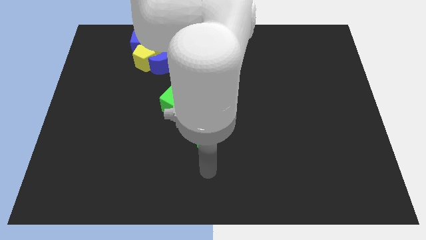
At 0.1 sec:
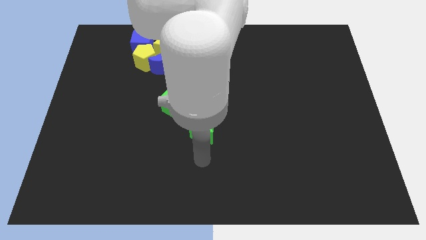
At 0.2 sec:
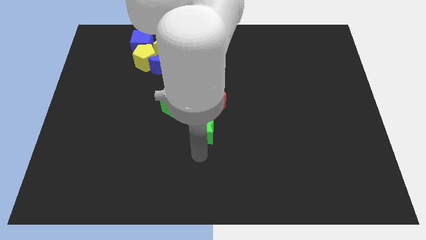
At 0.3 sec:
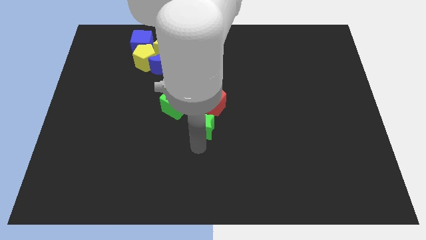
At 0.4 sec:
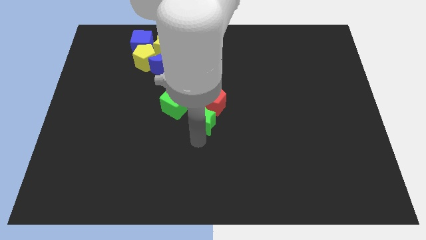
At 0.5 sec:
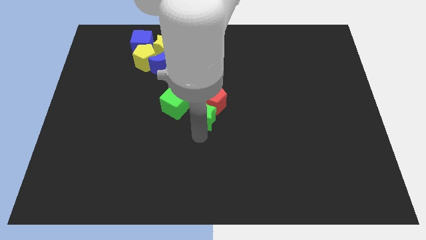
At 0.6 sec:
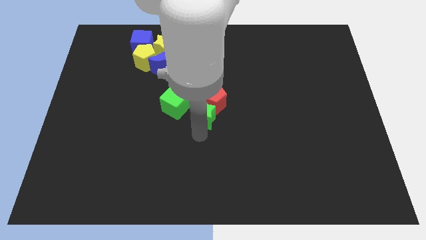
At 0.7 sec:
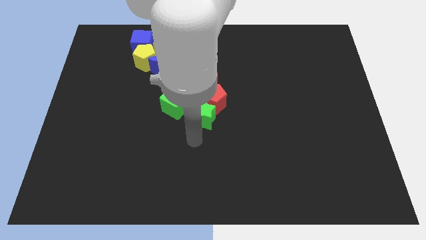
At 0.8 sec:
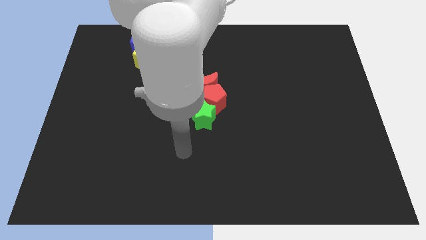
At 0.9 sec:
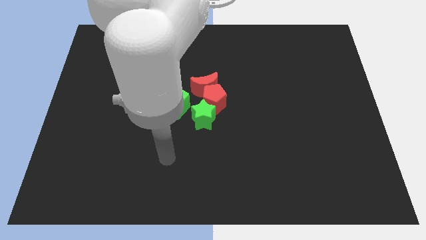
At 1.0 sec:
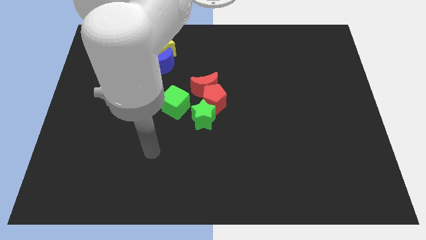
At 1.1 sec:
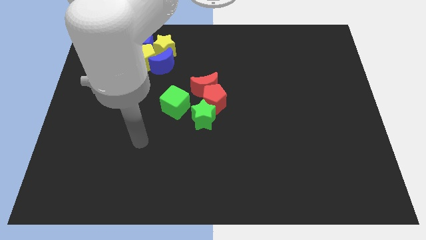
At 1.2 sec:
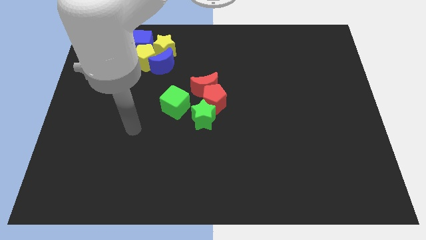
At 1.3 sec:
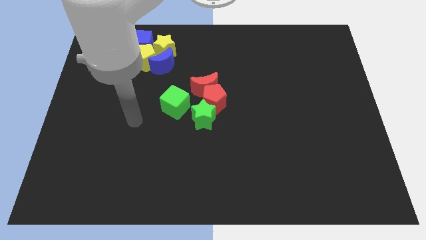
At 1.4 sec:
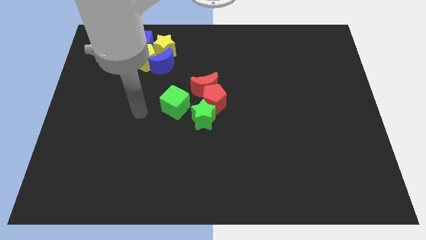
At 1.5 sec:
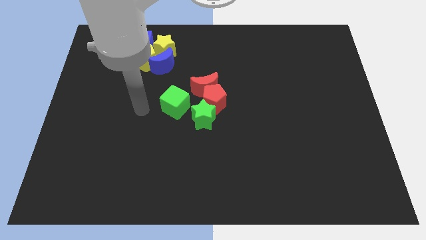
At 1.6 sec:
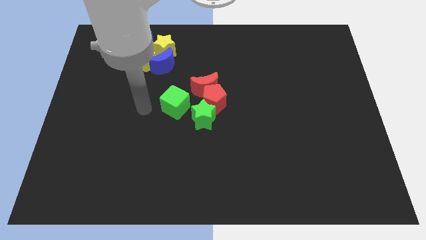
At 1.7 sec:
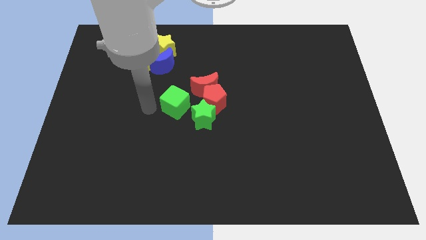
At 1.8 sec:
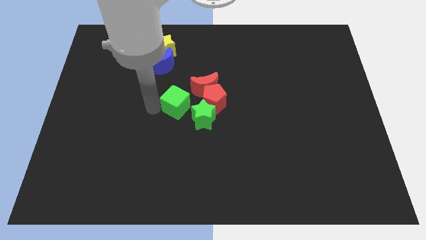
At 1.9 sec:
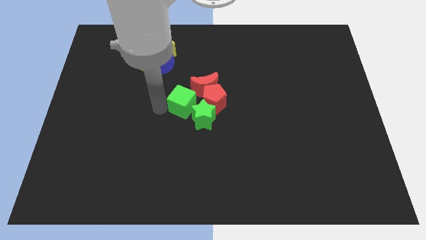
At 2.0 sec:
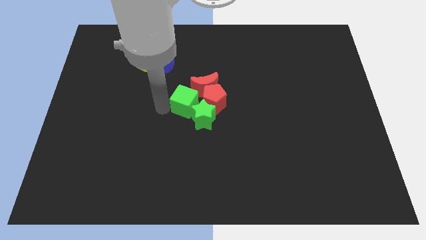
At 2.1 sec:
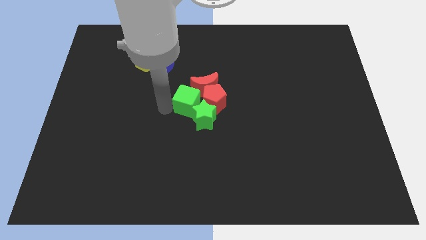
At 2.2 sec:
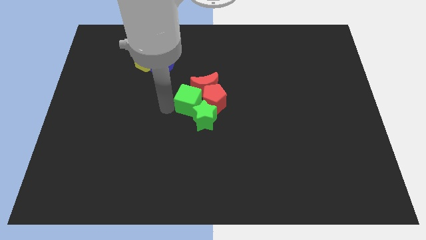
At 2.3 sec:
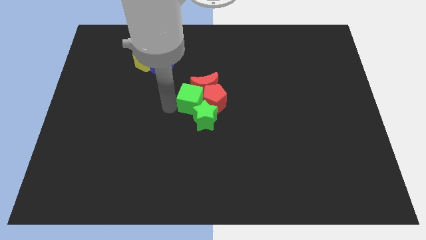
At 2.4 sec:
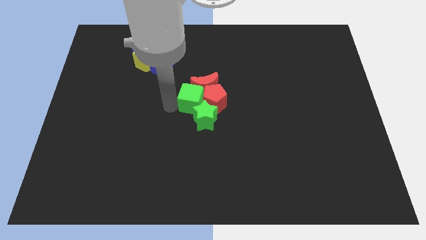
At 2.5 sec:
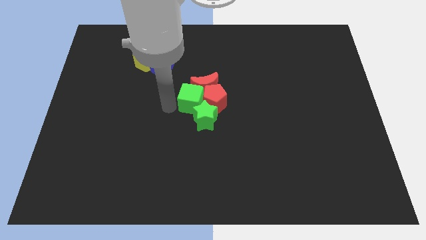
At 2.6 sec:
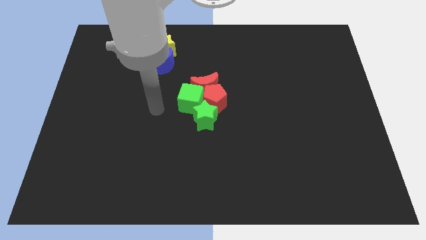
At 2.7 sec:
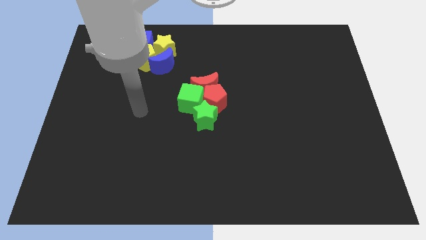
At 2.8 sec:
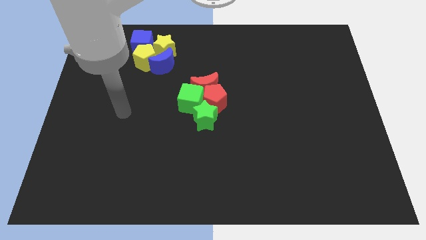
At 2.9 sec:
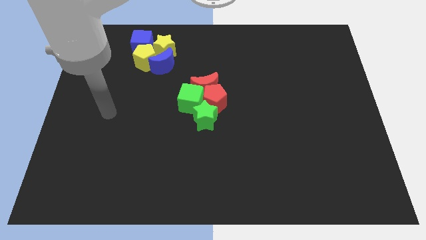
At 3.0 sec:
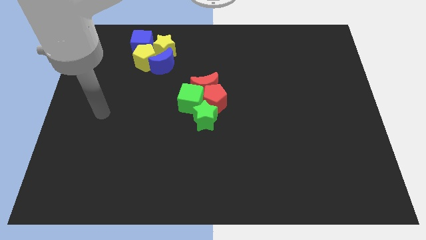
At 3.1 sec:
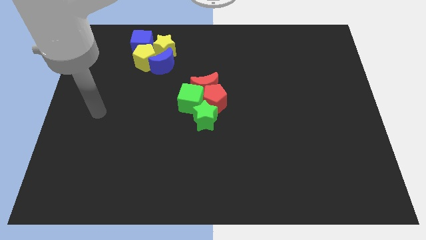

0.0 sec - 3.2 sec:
slide the green star and green cube into the red pentagon

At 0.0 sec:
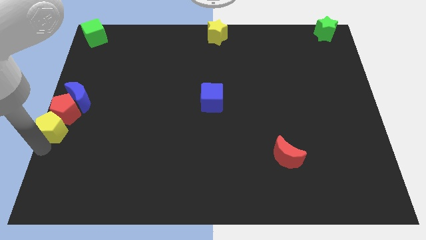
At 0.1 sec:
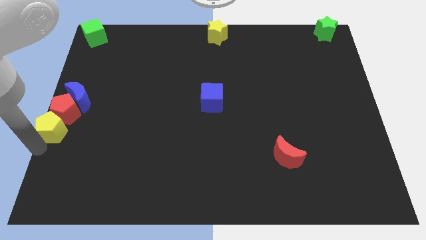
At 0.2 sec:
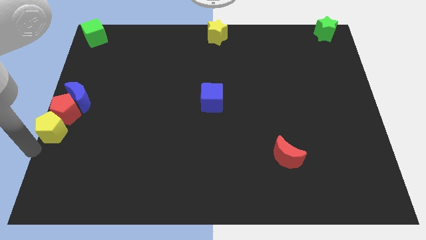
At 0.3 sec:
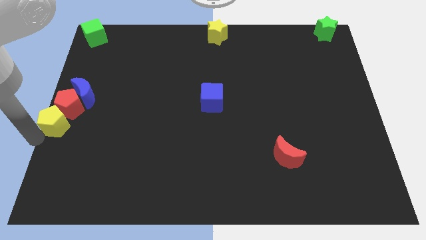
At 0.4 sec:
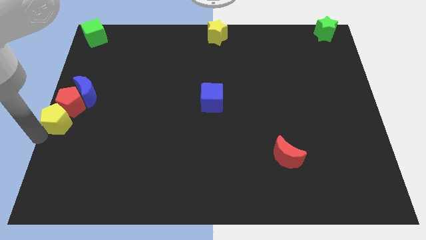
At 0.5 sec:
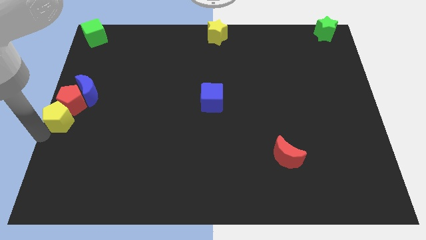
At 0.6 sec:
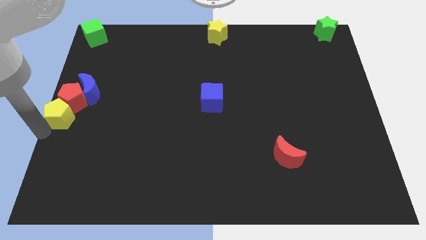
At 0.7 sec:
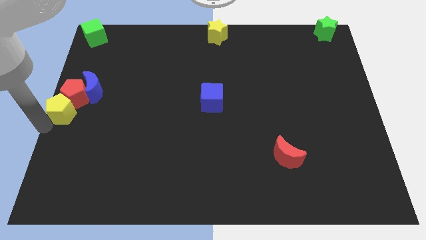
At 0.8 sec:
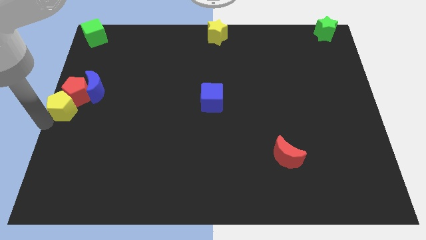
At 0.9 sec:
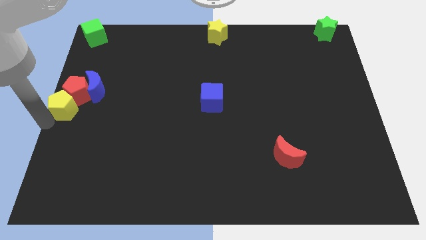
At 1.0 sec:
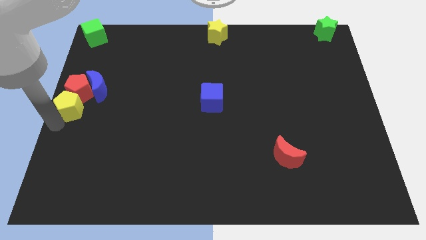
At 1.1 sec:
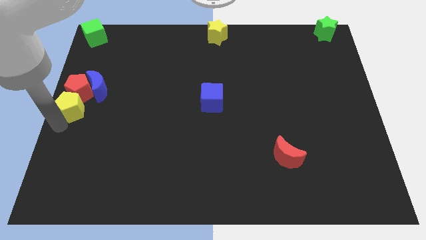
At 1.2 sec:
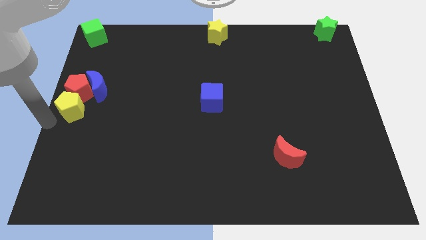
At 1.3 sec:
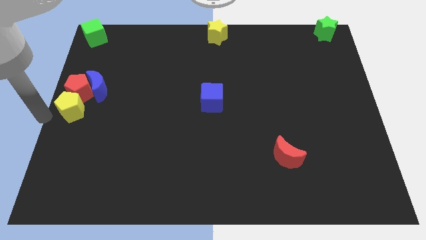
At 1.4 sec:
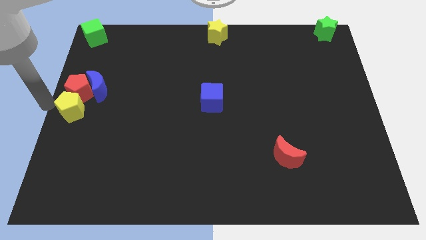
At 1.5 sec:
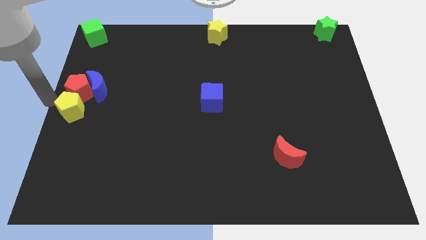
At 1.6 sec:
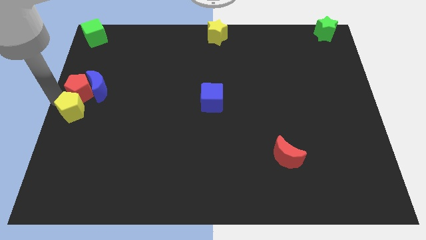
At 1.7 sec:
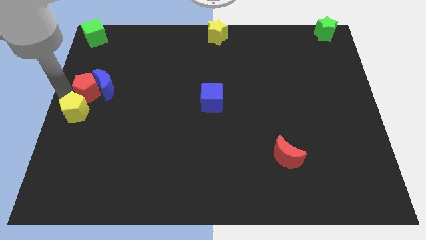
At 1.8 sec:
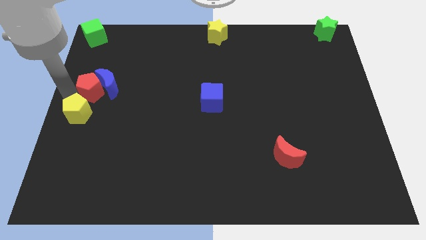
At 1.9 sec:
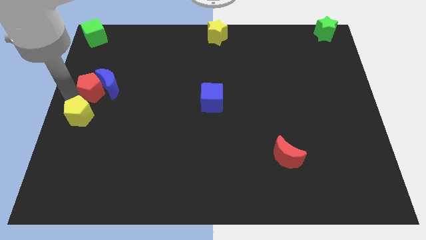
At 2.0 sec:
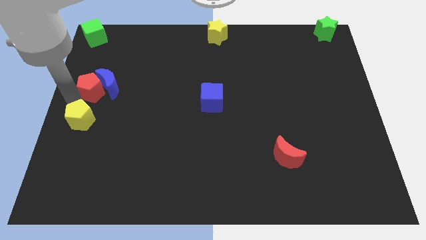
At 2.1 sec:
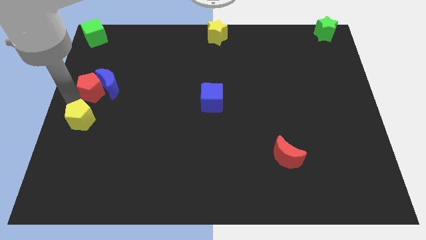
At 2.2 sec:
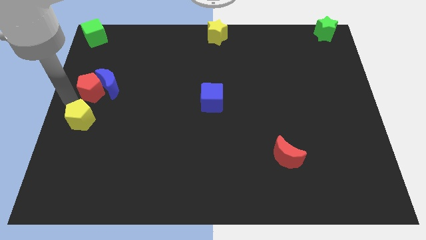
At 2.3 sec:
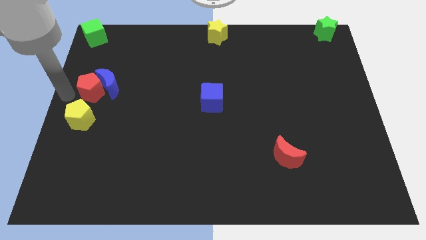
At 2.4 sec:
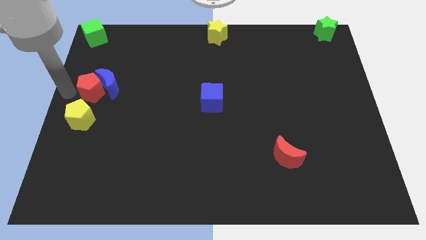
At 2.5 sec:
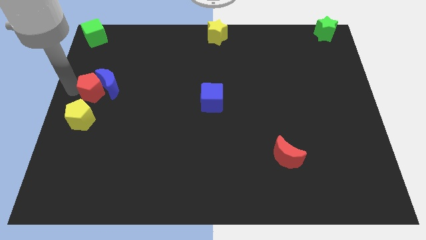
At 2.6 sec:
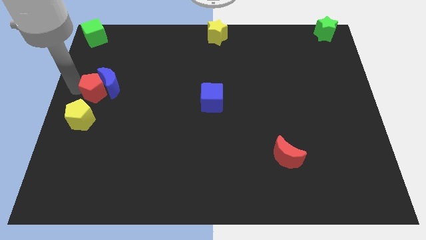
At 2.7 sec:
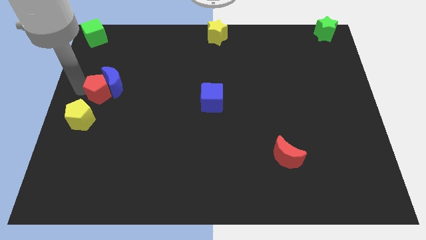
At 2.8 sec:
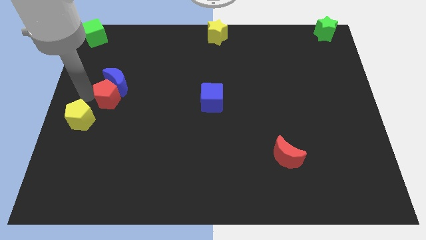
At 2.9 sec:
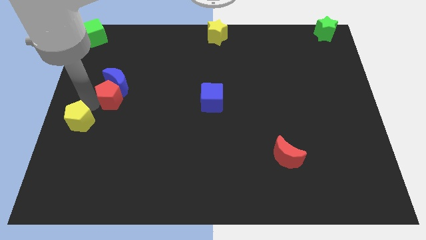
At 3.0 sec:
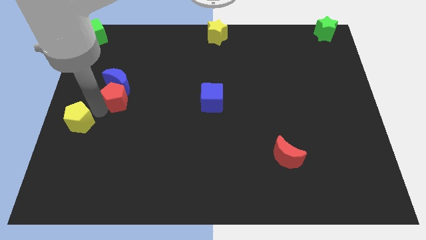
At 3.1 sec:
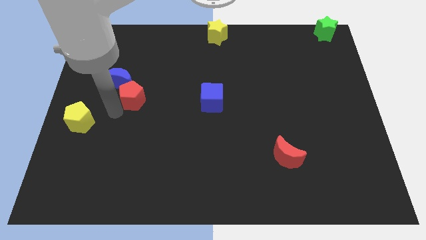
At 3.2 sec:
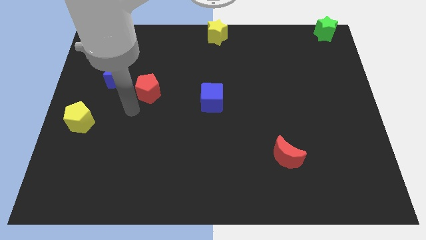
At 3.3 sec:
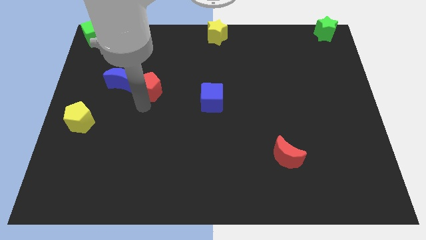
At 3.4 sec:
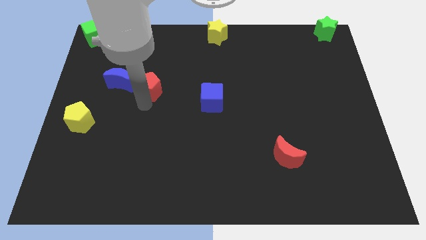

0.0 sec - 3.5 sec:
move the red pentagon to the right of blue moon

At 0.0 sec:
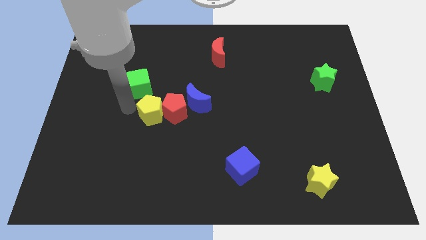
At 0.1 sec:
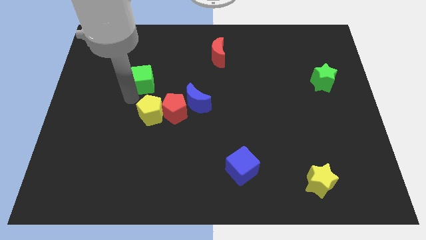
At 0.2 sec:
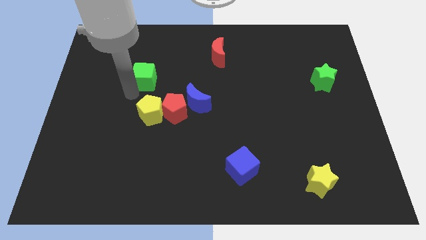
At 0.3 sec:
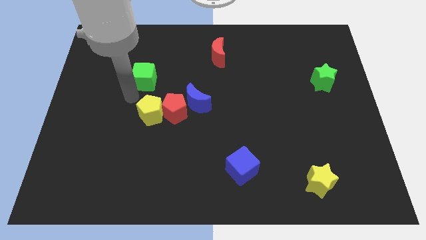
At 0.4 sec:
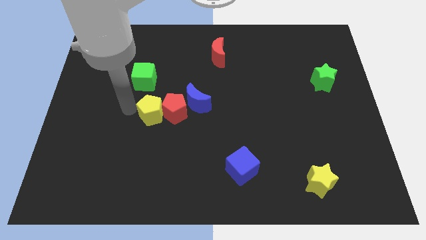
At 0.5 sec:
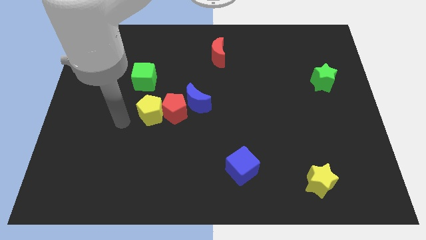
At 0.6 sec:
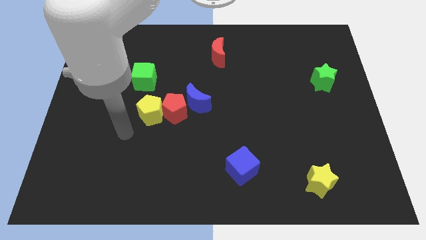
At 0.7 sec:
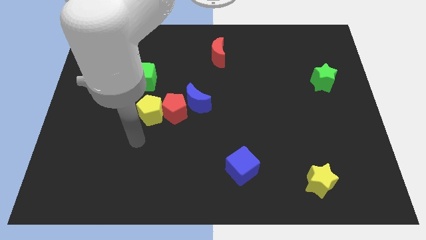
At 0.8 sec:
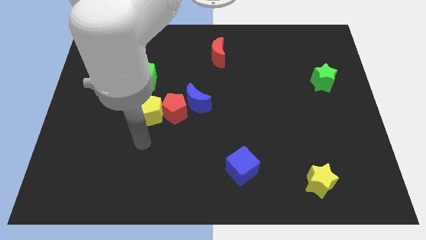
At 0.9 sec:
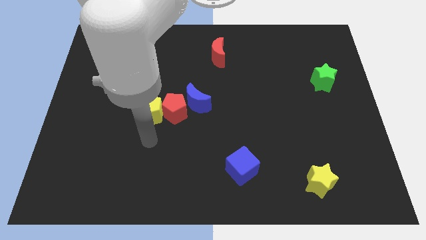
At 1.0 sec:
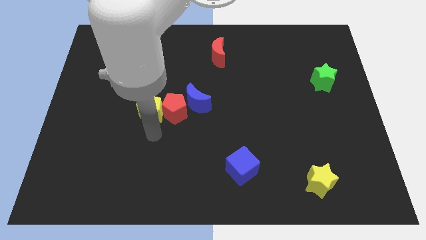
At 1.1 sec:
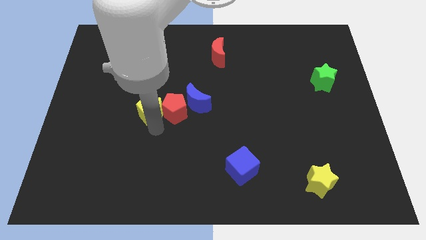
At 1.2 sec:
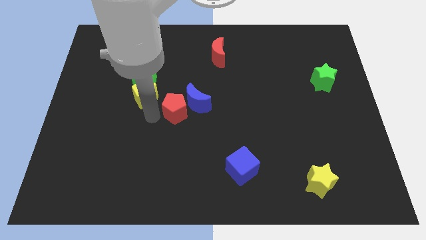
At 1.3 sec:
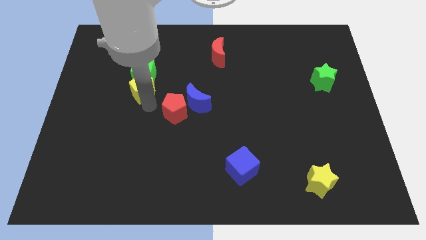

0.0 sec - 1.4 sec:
move yellow pentagon into green cube

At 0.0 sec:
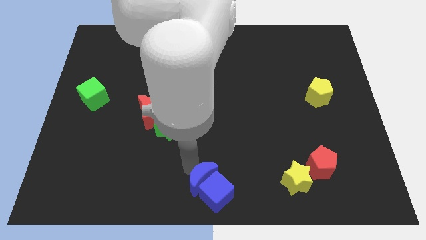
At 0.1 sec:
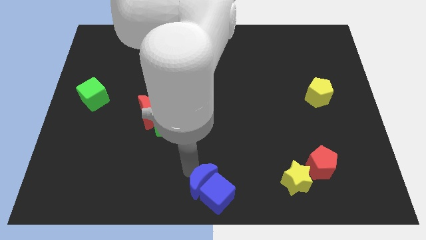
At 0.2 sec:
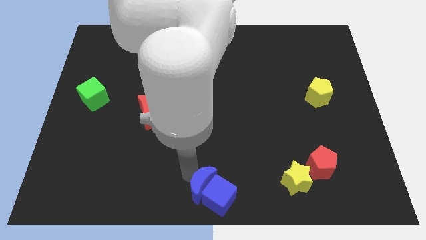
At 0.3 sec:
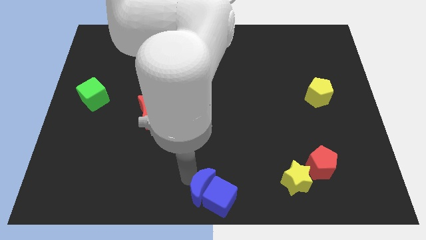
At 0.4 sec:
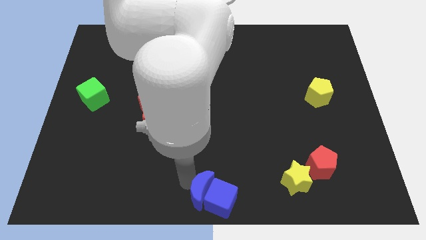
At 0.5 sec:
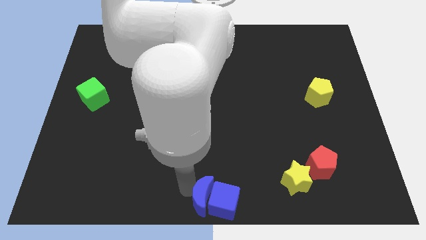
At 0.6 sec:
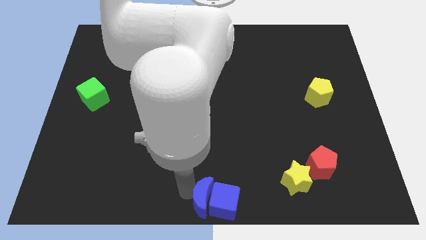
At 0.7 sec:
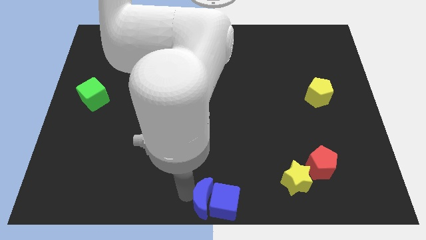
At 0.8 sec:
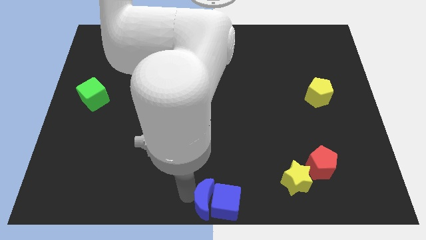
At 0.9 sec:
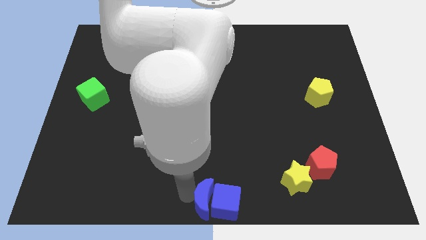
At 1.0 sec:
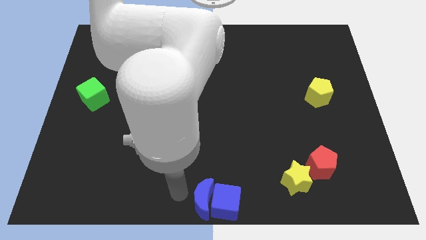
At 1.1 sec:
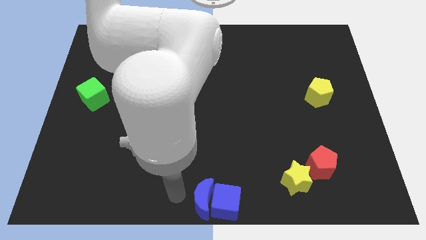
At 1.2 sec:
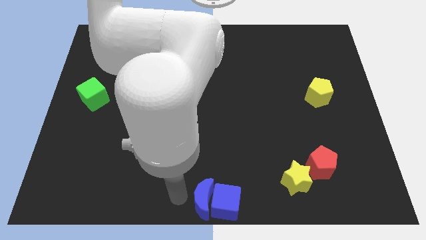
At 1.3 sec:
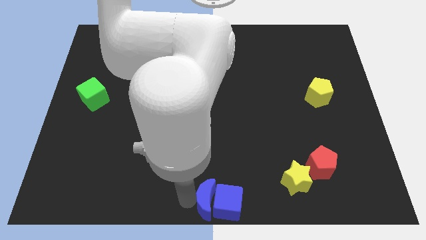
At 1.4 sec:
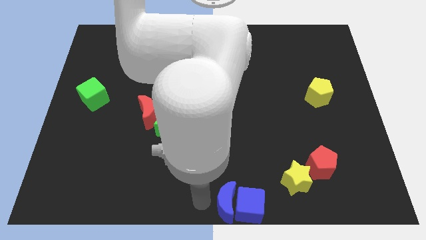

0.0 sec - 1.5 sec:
move blue objects towards bottom center
